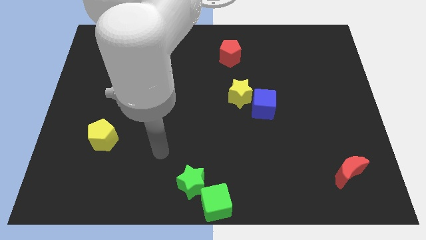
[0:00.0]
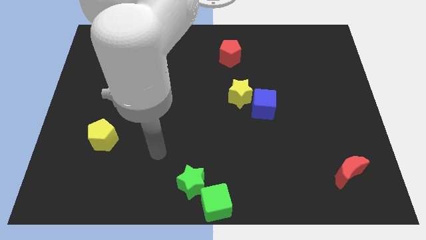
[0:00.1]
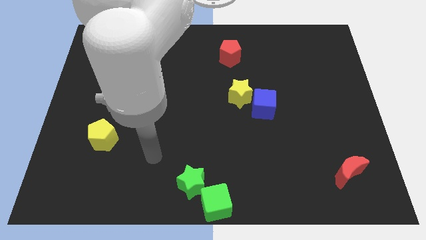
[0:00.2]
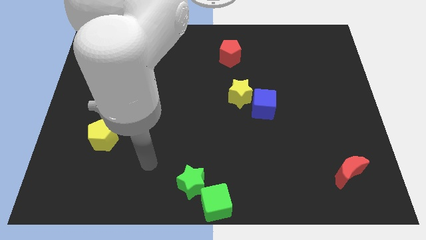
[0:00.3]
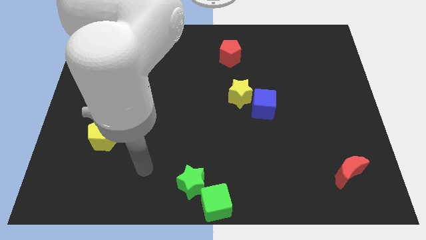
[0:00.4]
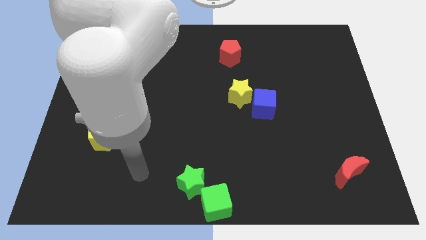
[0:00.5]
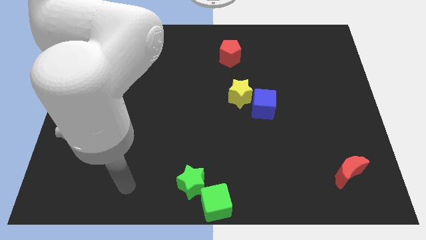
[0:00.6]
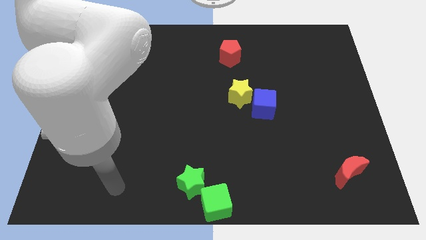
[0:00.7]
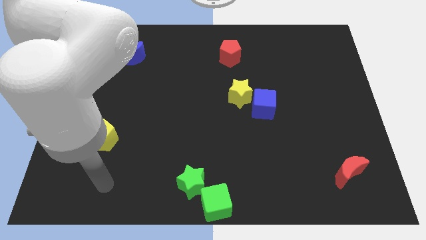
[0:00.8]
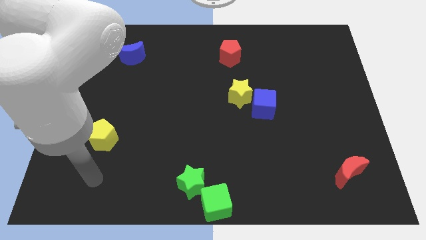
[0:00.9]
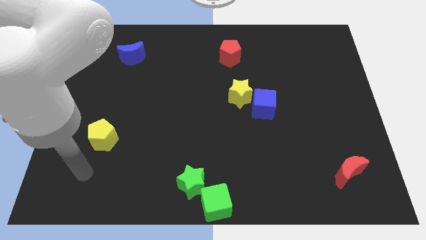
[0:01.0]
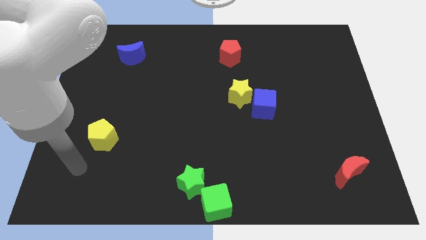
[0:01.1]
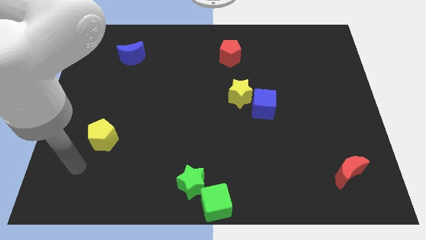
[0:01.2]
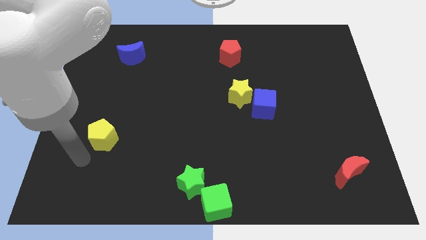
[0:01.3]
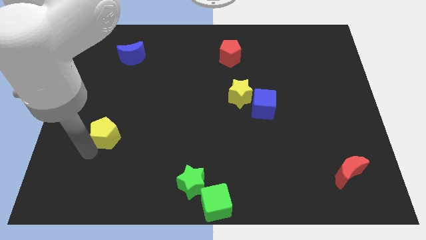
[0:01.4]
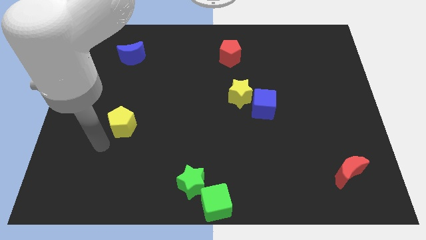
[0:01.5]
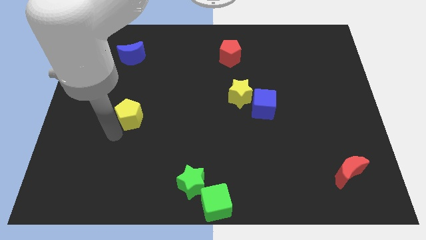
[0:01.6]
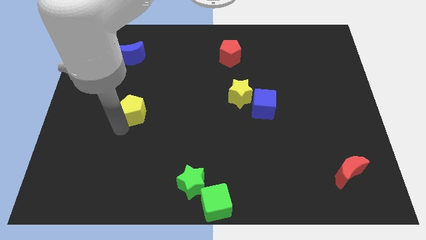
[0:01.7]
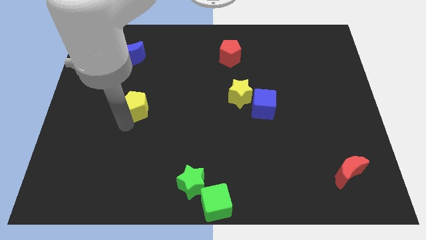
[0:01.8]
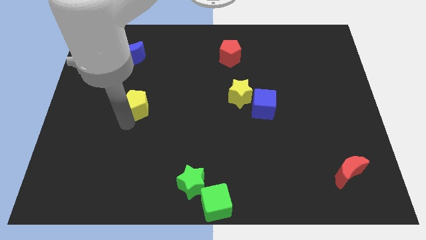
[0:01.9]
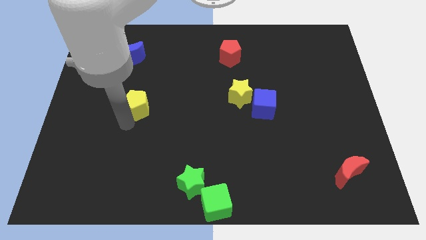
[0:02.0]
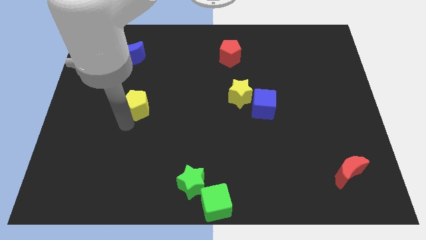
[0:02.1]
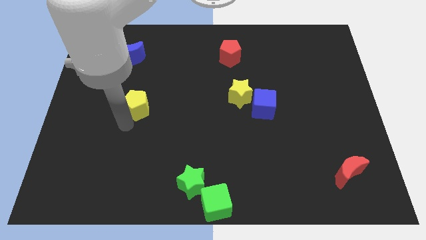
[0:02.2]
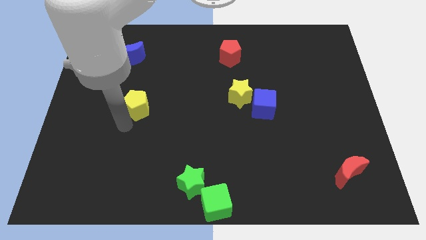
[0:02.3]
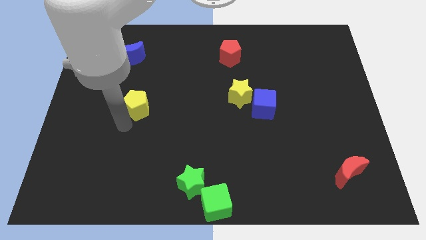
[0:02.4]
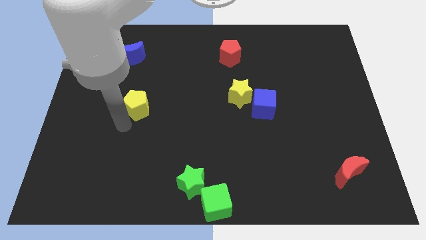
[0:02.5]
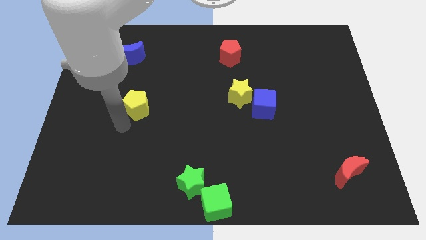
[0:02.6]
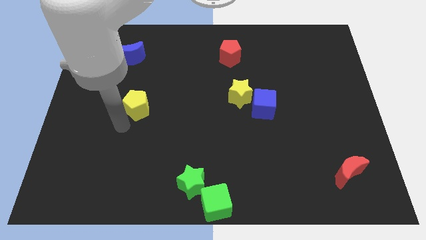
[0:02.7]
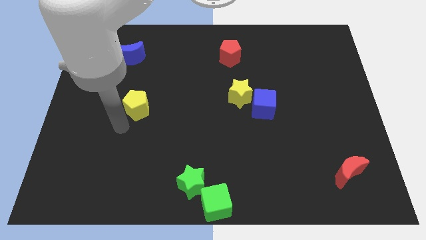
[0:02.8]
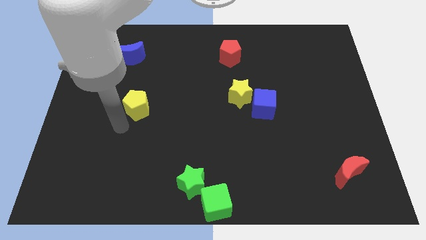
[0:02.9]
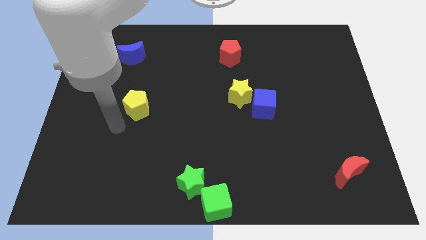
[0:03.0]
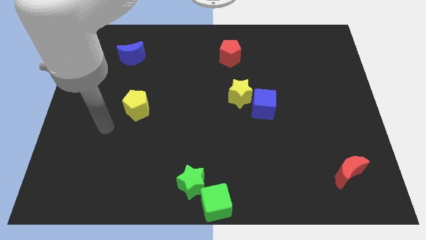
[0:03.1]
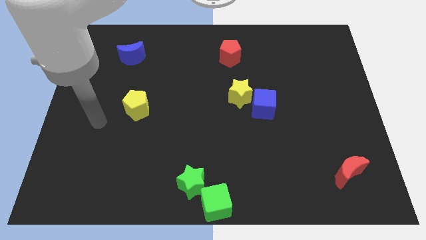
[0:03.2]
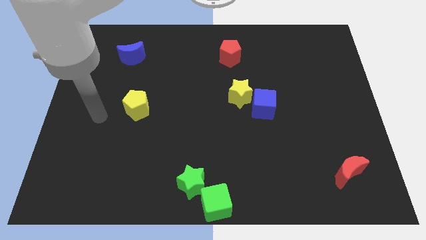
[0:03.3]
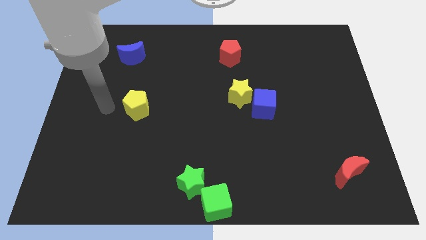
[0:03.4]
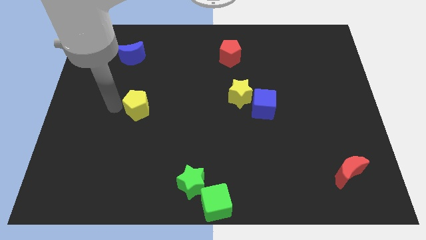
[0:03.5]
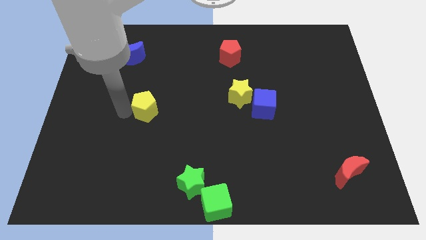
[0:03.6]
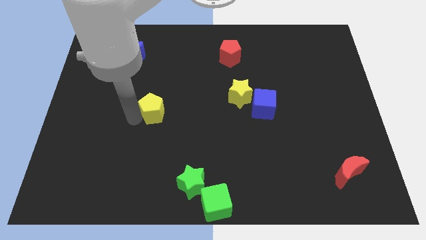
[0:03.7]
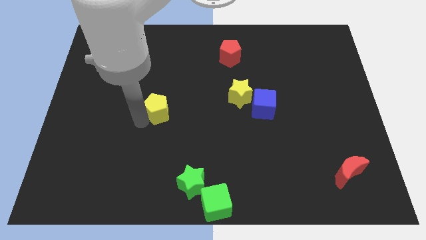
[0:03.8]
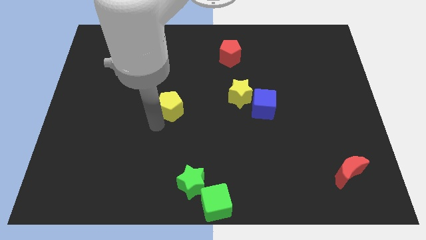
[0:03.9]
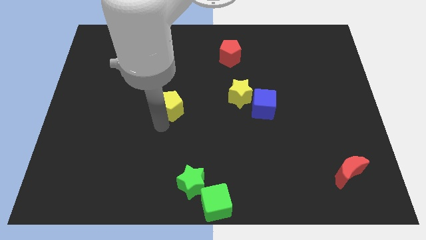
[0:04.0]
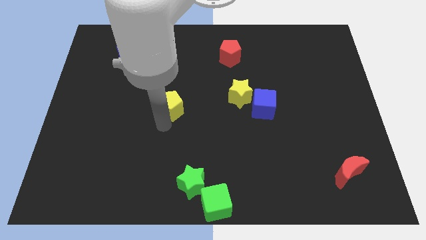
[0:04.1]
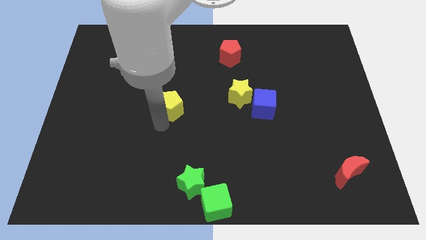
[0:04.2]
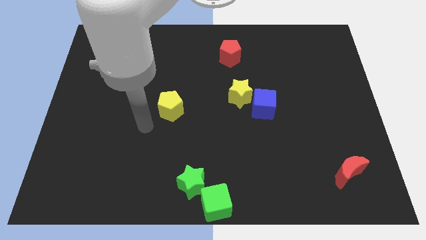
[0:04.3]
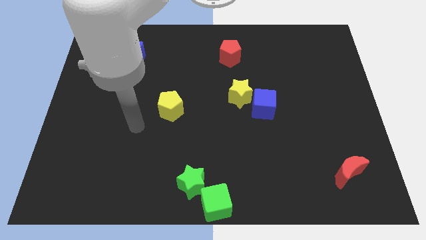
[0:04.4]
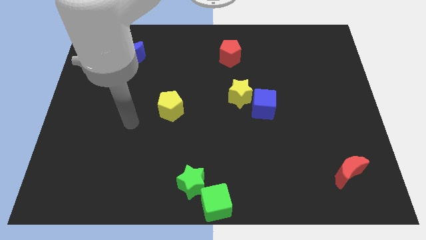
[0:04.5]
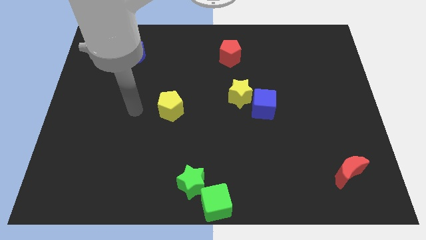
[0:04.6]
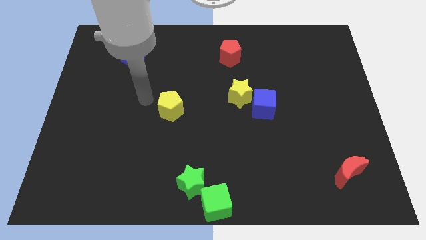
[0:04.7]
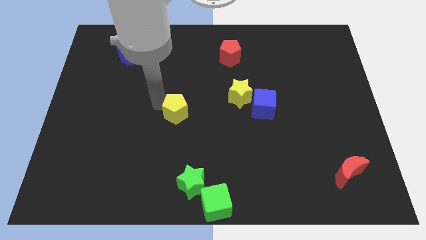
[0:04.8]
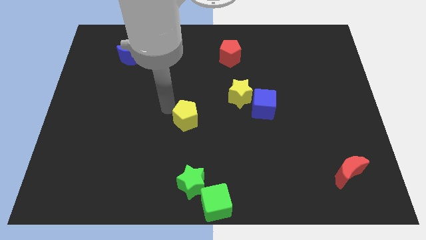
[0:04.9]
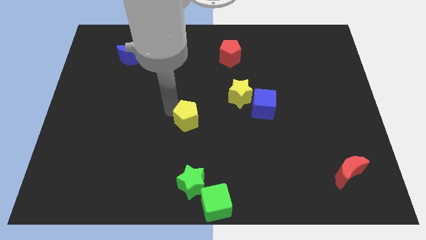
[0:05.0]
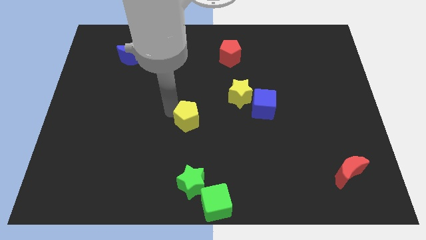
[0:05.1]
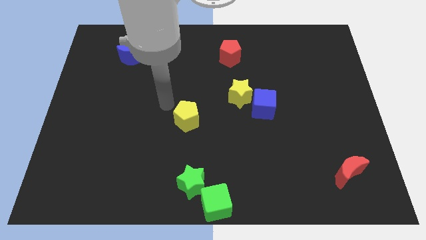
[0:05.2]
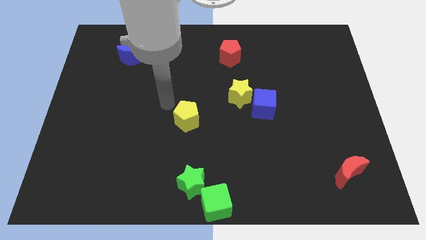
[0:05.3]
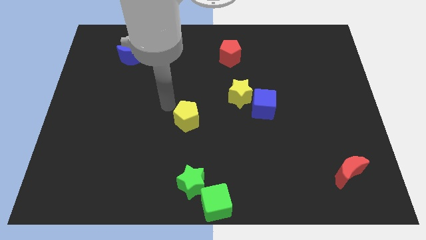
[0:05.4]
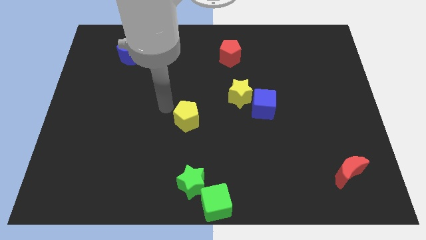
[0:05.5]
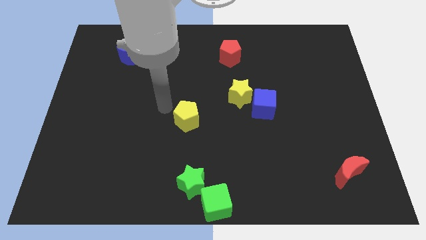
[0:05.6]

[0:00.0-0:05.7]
move the yellow pentagon towards the center of the board

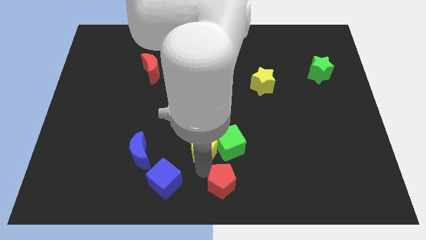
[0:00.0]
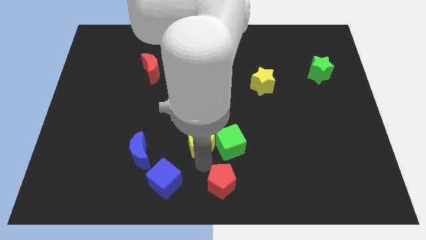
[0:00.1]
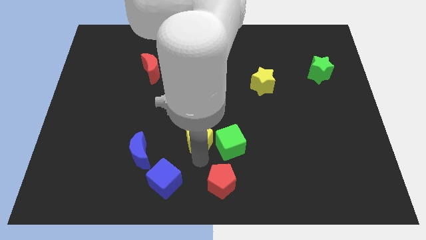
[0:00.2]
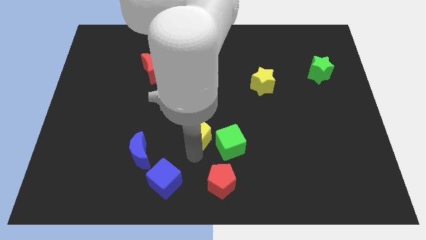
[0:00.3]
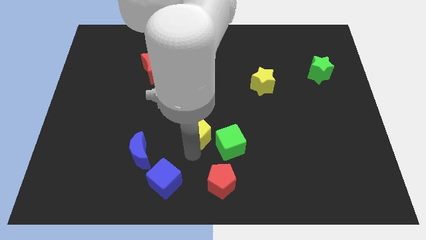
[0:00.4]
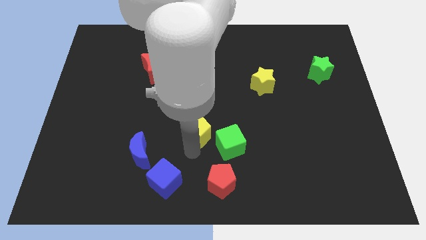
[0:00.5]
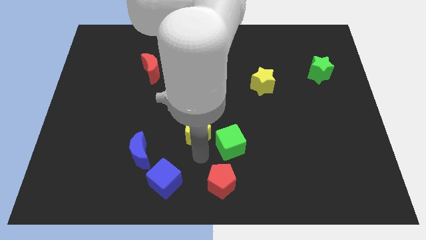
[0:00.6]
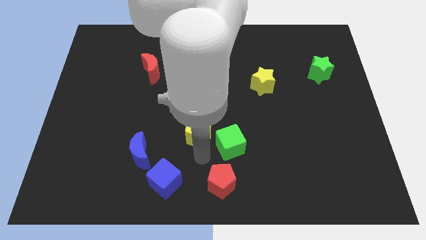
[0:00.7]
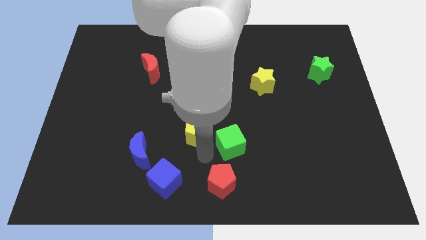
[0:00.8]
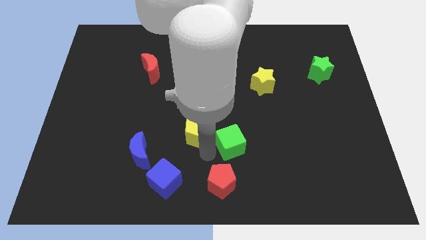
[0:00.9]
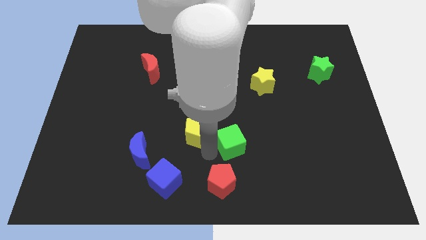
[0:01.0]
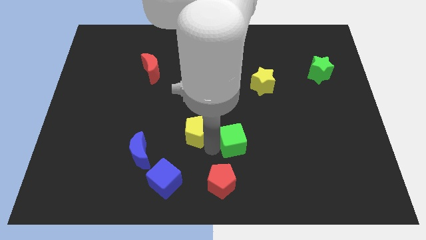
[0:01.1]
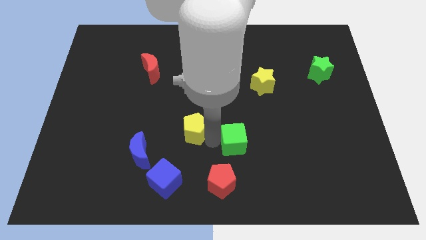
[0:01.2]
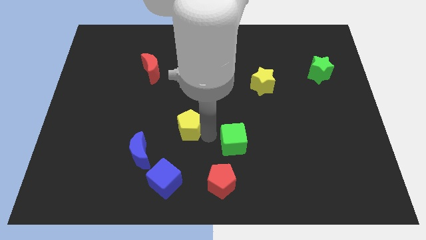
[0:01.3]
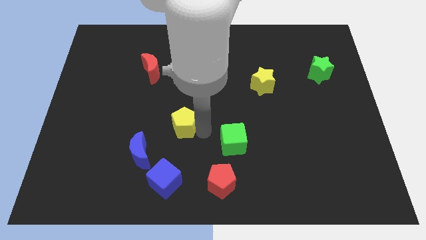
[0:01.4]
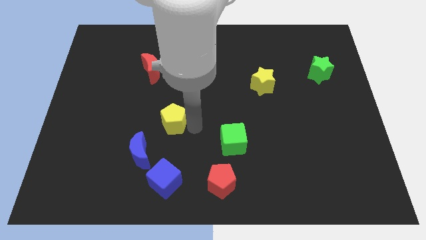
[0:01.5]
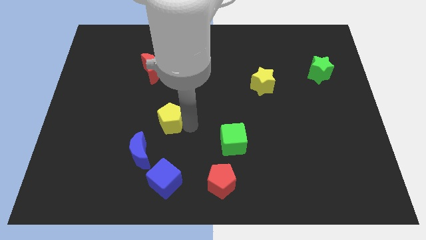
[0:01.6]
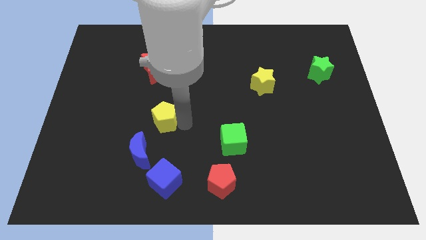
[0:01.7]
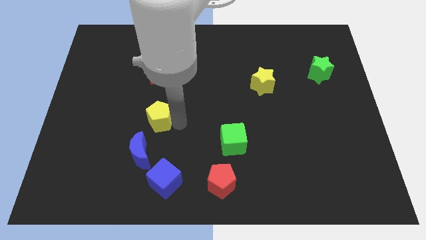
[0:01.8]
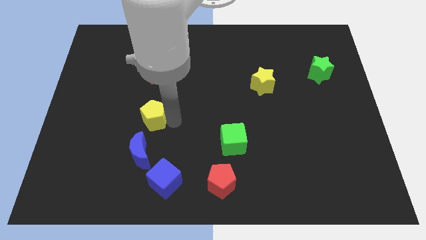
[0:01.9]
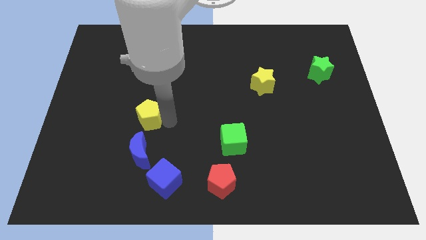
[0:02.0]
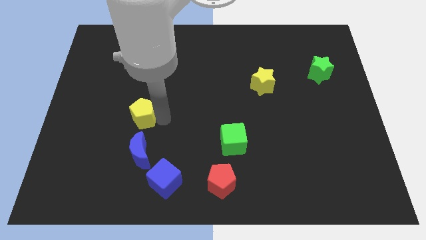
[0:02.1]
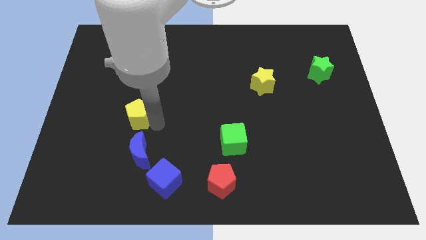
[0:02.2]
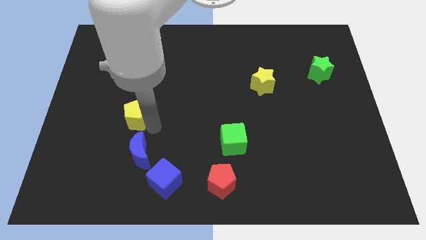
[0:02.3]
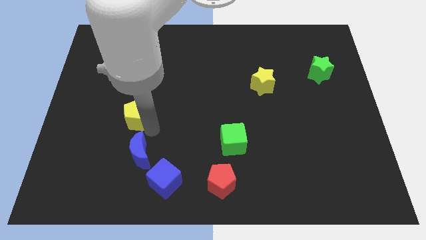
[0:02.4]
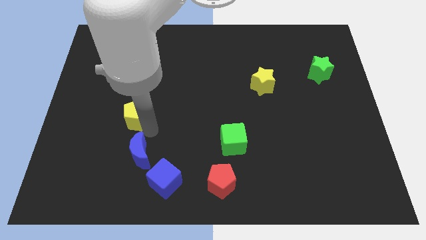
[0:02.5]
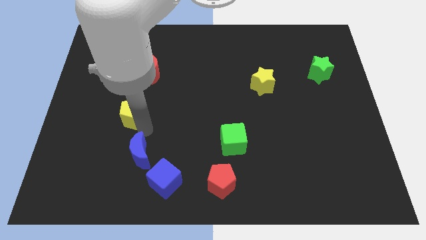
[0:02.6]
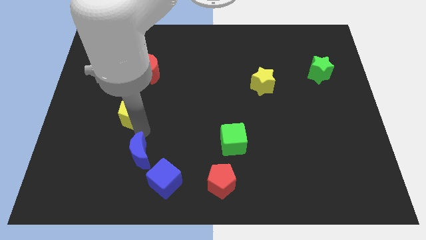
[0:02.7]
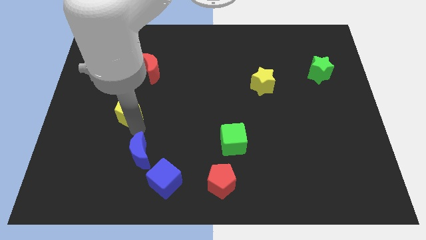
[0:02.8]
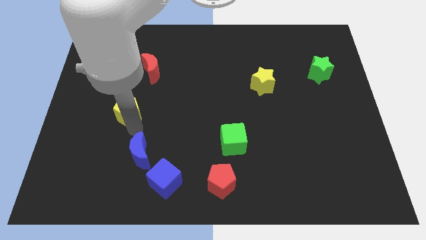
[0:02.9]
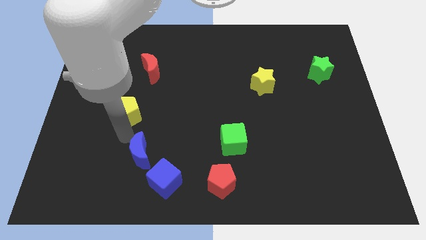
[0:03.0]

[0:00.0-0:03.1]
separate yellow pentagon from the green cube

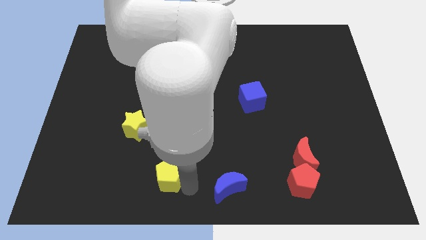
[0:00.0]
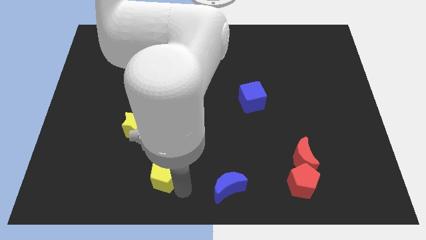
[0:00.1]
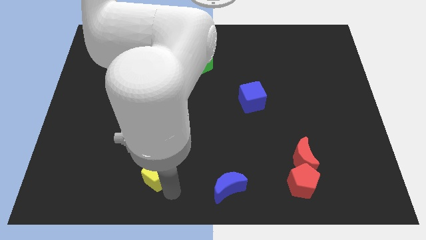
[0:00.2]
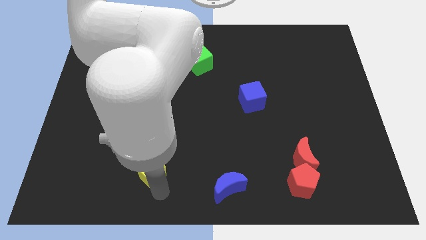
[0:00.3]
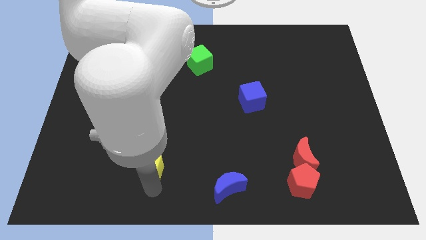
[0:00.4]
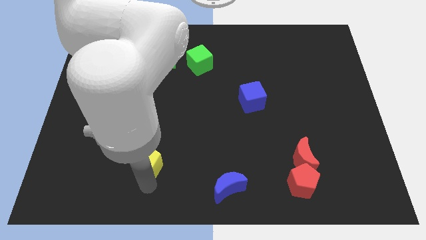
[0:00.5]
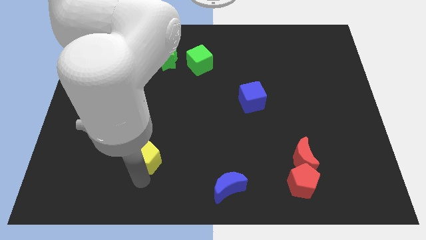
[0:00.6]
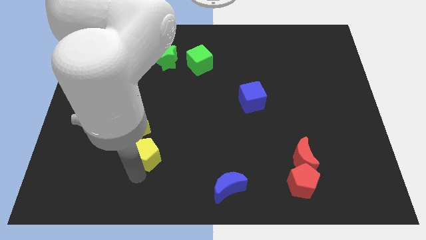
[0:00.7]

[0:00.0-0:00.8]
push the yellow pentagon towards the yellow star
